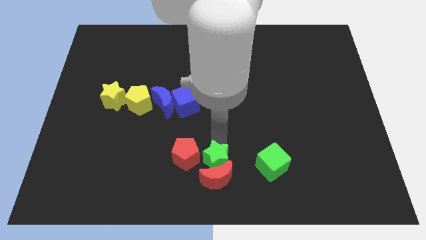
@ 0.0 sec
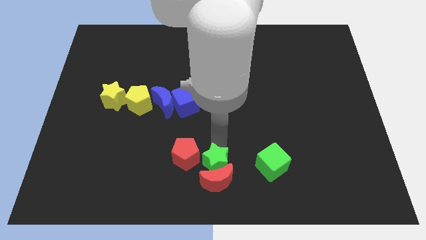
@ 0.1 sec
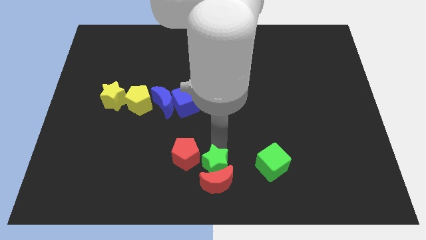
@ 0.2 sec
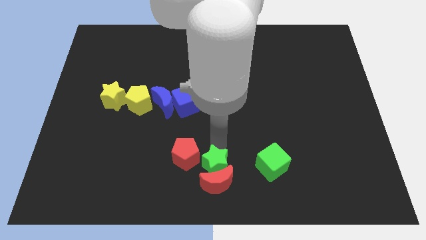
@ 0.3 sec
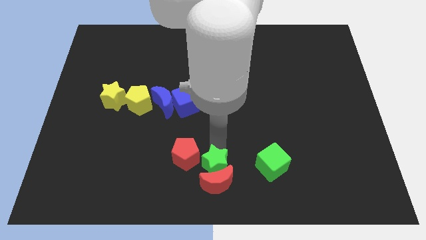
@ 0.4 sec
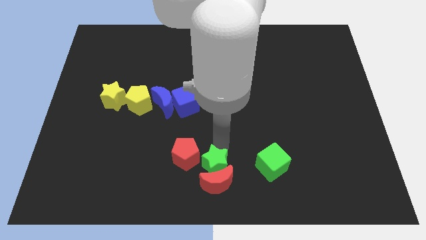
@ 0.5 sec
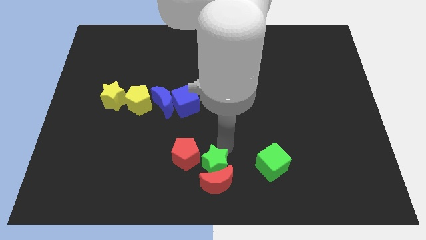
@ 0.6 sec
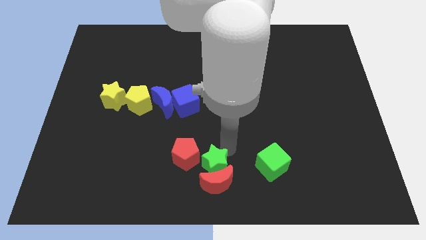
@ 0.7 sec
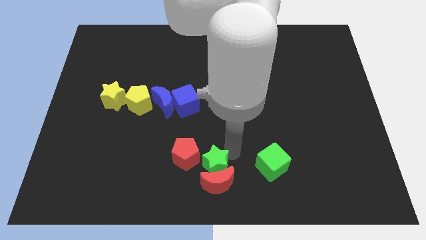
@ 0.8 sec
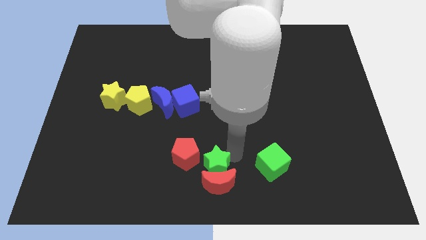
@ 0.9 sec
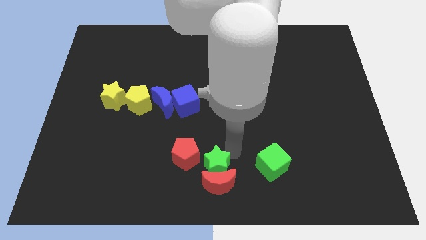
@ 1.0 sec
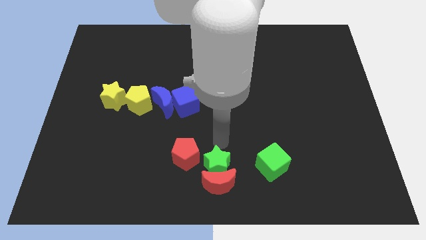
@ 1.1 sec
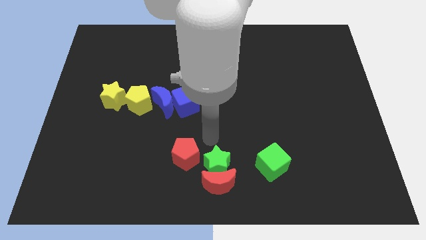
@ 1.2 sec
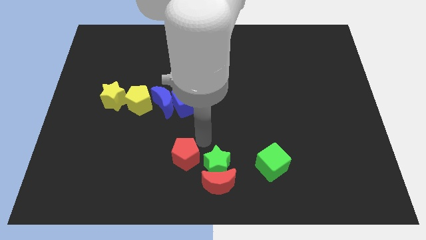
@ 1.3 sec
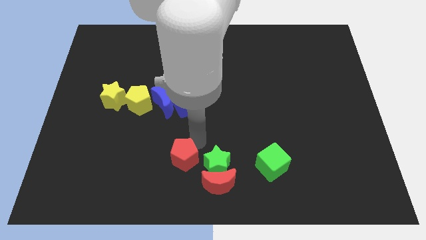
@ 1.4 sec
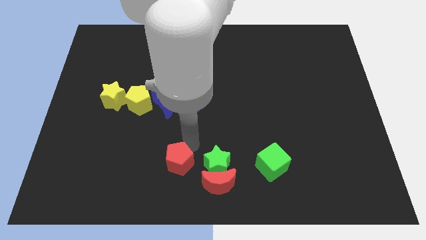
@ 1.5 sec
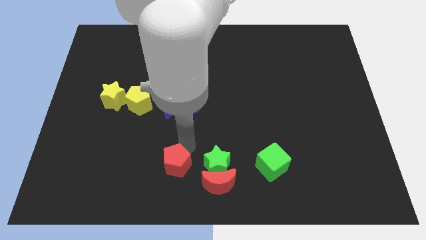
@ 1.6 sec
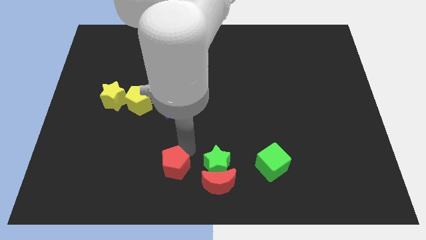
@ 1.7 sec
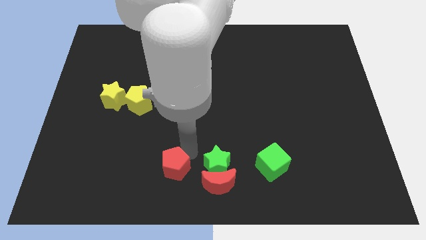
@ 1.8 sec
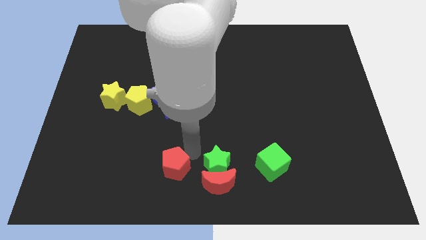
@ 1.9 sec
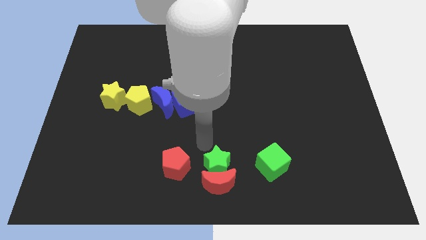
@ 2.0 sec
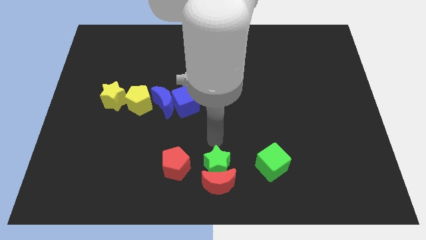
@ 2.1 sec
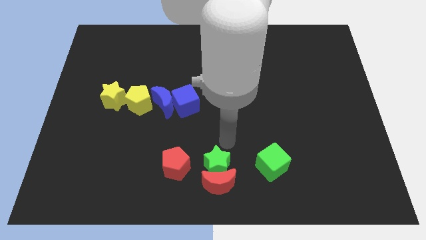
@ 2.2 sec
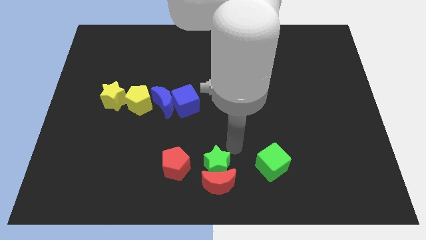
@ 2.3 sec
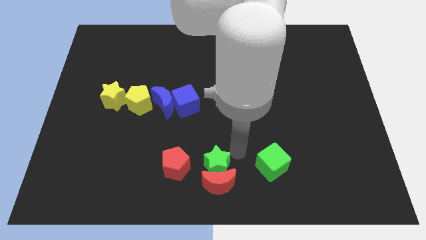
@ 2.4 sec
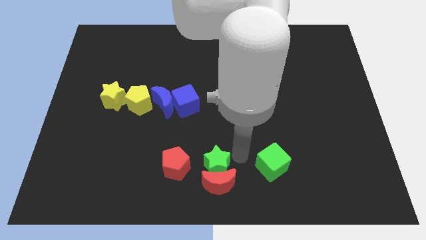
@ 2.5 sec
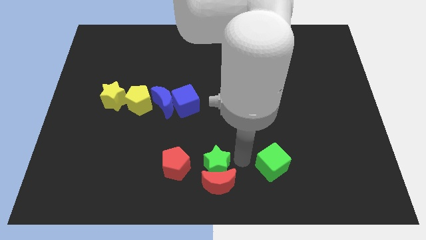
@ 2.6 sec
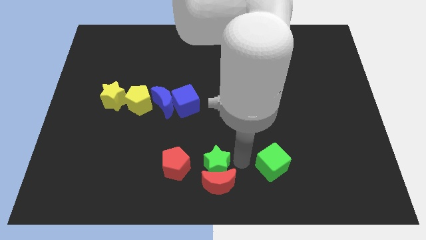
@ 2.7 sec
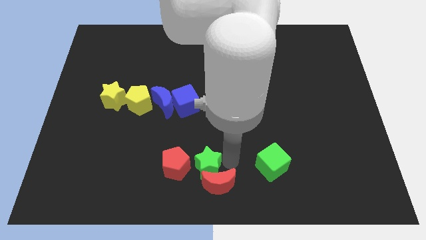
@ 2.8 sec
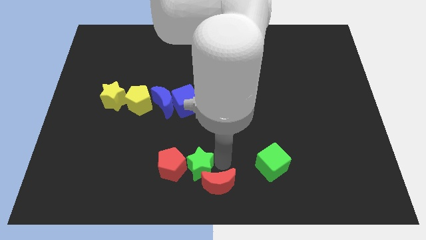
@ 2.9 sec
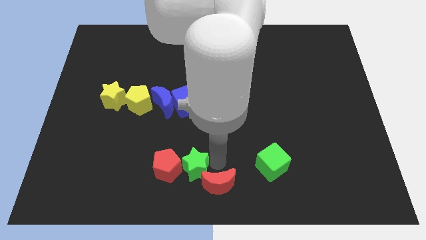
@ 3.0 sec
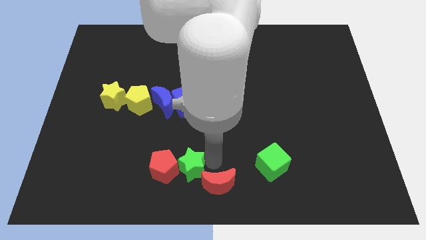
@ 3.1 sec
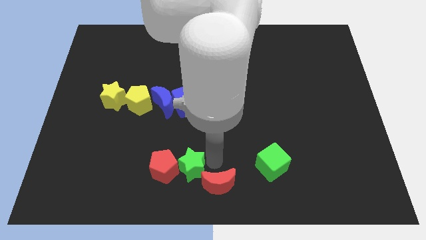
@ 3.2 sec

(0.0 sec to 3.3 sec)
push the red pentagon and green star to the left

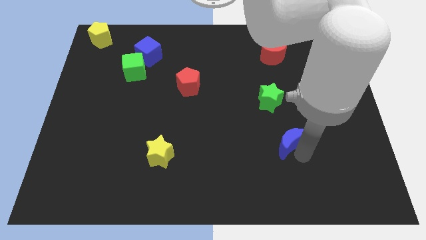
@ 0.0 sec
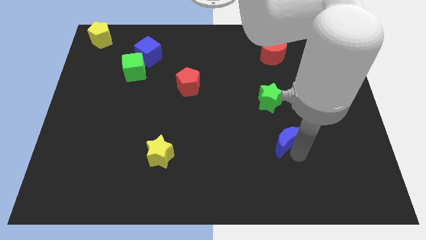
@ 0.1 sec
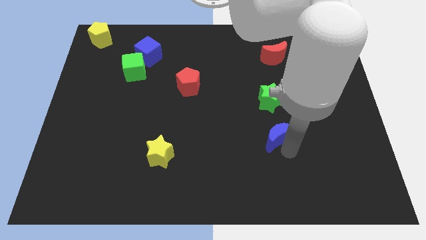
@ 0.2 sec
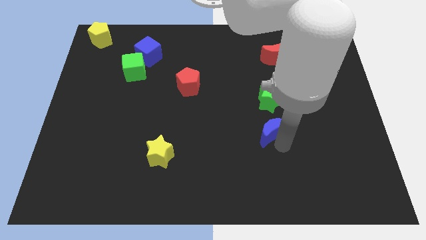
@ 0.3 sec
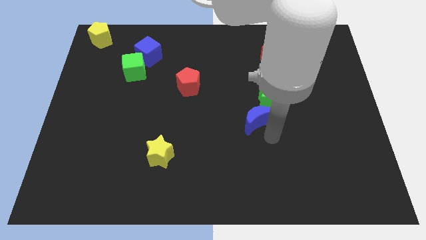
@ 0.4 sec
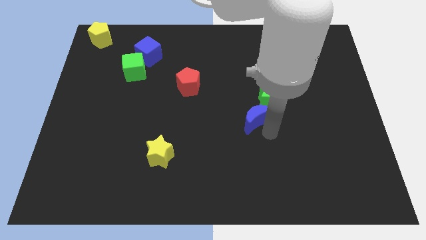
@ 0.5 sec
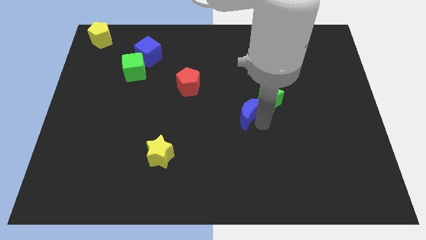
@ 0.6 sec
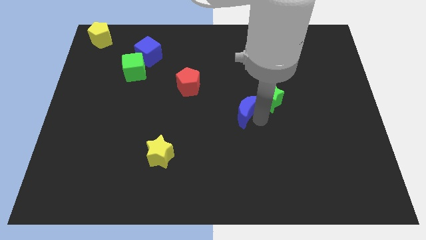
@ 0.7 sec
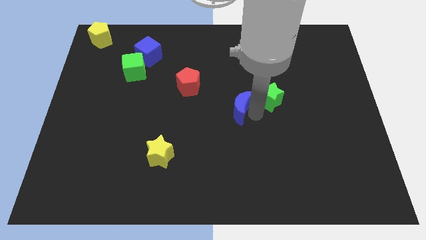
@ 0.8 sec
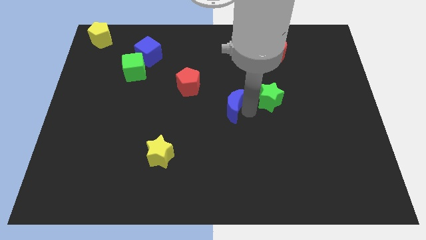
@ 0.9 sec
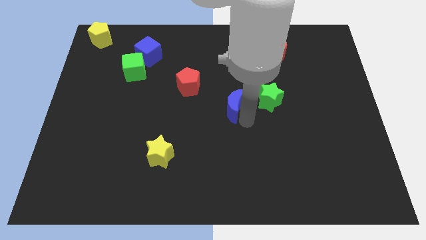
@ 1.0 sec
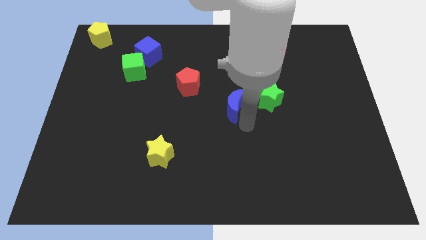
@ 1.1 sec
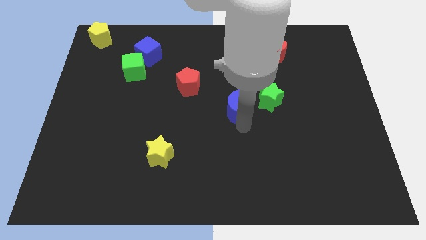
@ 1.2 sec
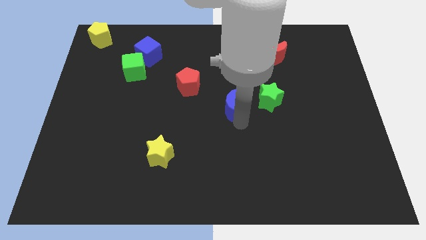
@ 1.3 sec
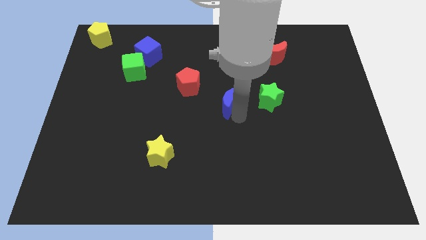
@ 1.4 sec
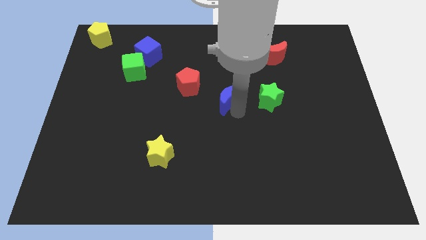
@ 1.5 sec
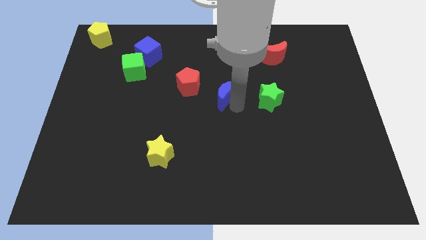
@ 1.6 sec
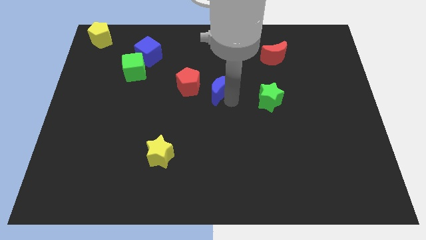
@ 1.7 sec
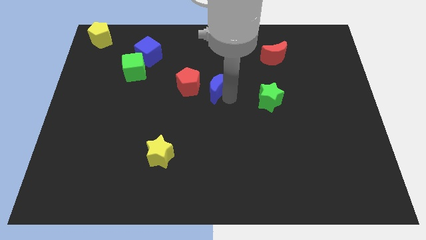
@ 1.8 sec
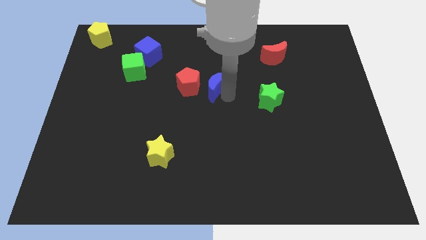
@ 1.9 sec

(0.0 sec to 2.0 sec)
place the blue moon in between the green star and red pentagon

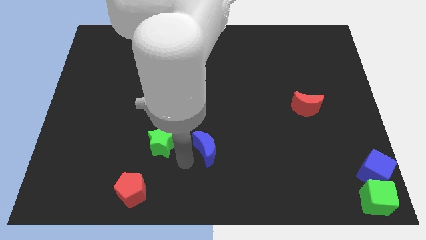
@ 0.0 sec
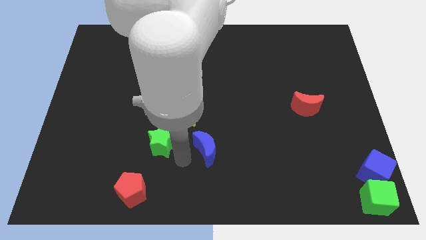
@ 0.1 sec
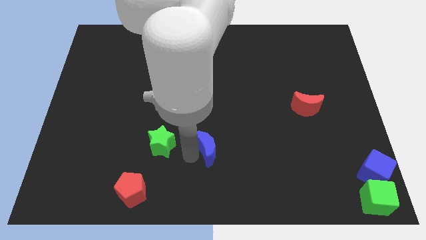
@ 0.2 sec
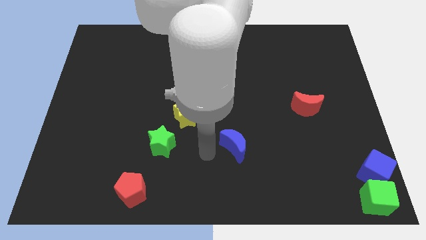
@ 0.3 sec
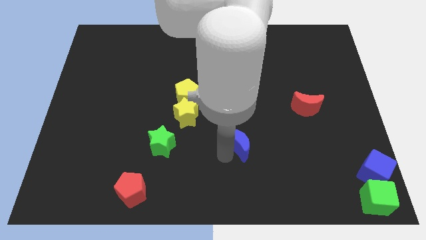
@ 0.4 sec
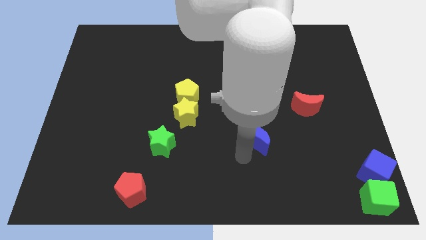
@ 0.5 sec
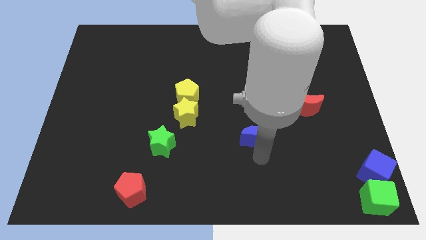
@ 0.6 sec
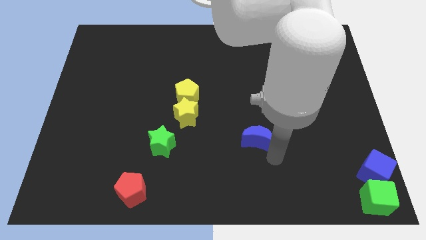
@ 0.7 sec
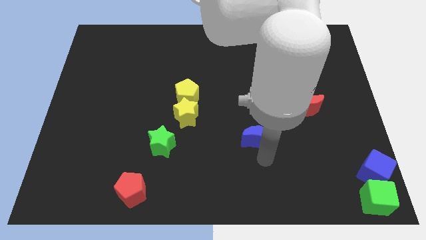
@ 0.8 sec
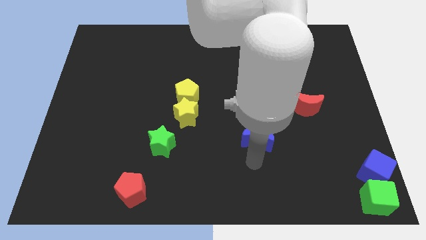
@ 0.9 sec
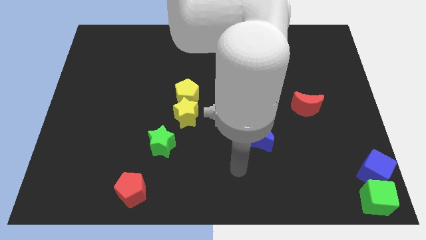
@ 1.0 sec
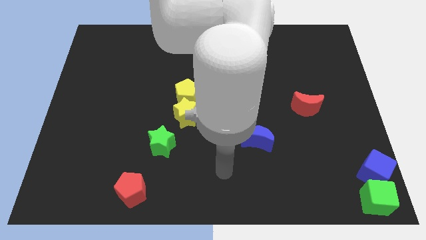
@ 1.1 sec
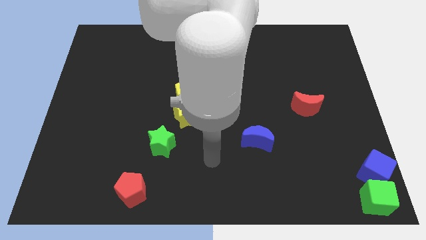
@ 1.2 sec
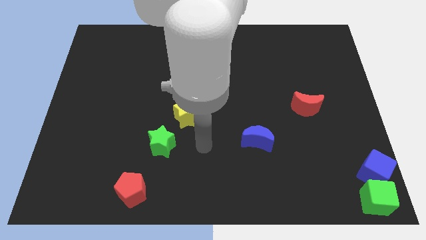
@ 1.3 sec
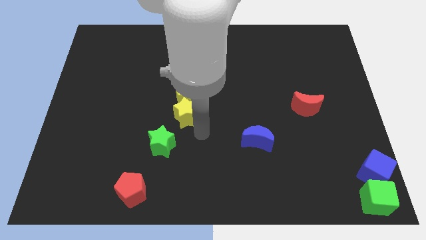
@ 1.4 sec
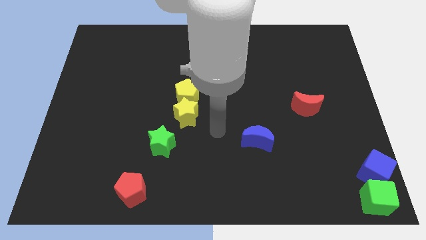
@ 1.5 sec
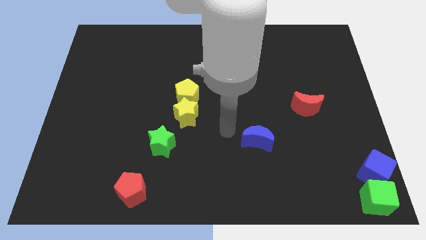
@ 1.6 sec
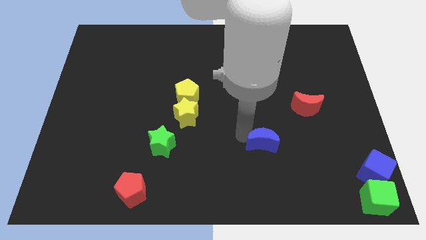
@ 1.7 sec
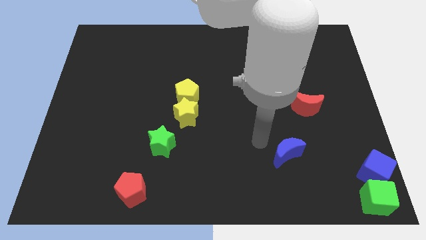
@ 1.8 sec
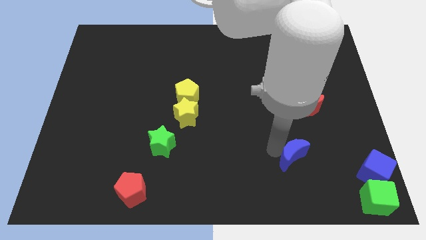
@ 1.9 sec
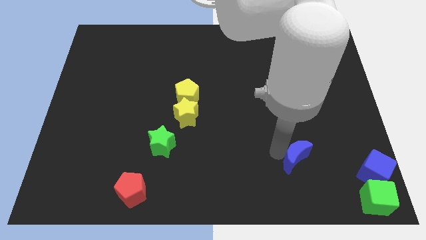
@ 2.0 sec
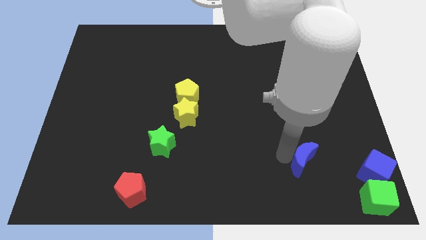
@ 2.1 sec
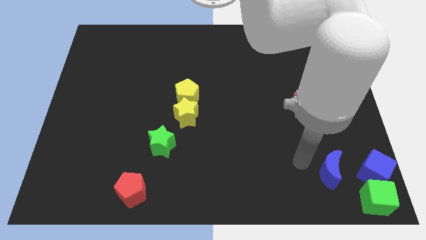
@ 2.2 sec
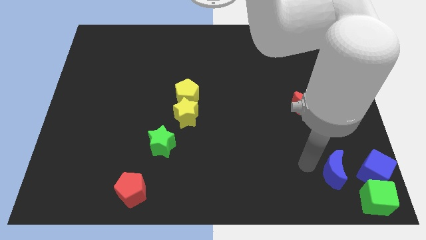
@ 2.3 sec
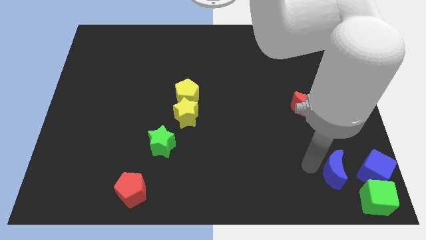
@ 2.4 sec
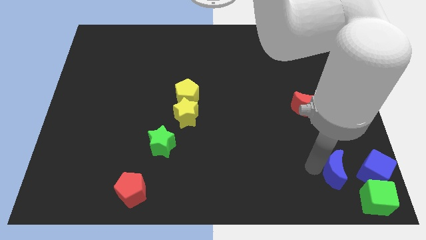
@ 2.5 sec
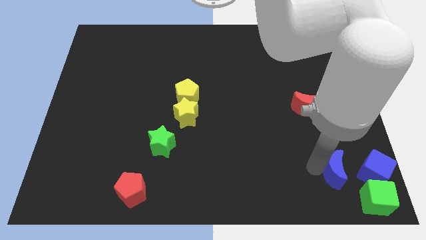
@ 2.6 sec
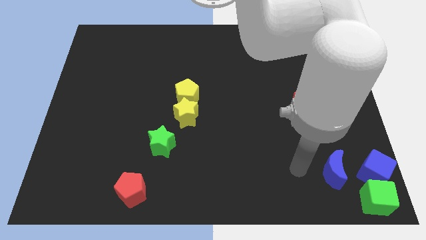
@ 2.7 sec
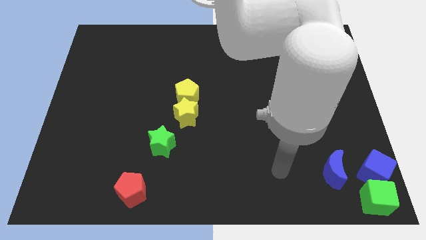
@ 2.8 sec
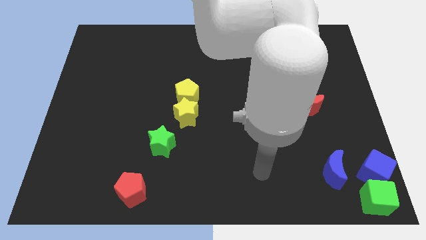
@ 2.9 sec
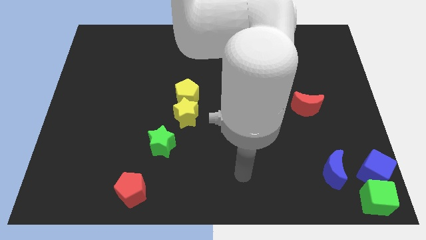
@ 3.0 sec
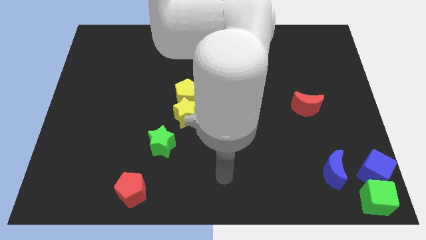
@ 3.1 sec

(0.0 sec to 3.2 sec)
place the blue moon diagonally bottom right to the red moon

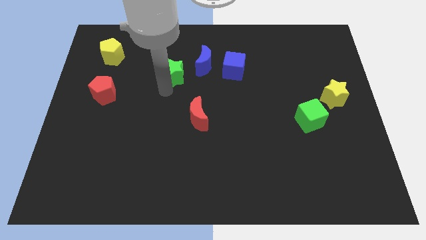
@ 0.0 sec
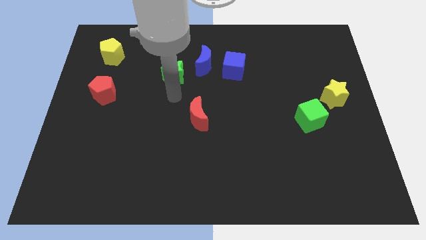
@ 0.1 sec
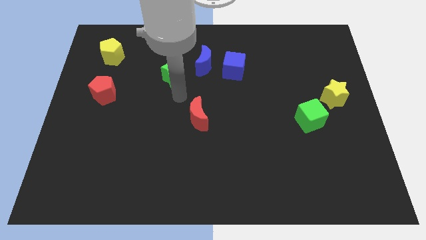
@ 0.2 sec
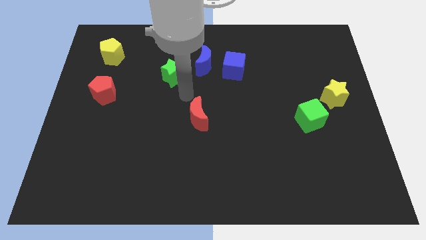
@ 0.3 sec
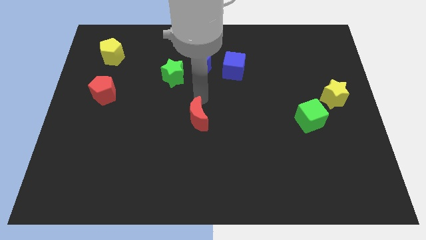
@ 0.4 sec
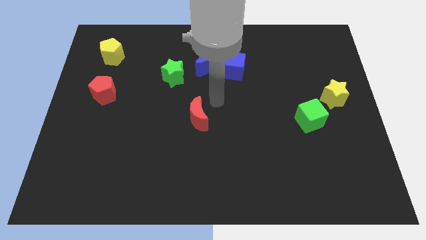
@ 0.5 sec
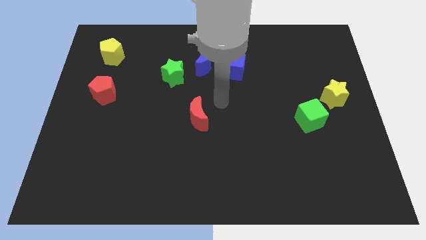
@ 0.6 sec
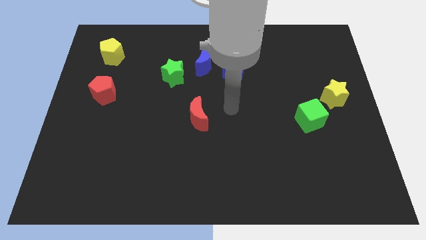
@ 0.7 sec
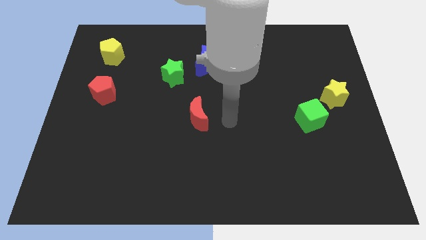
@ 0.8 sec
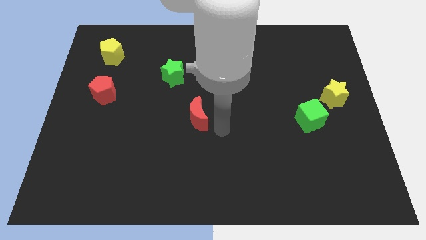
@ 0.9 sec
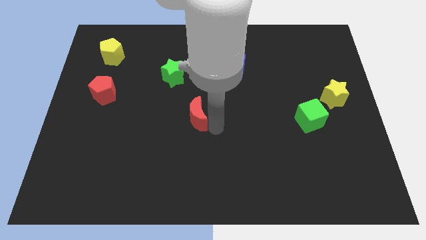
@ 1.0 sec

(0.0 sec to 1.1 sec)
point your arm at the bottom right side of red moon
